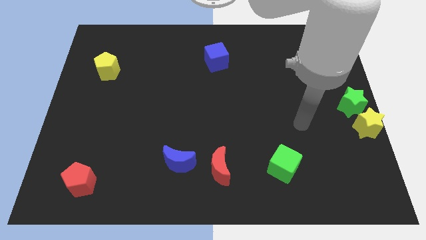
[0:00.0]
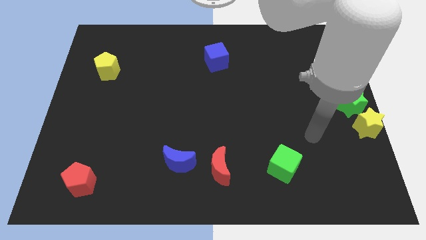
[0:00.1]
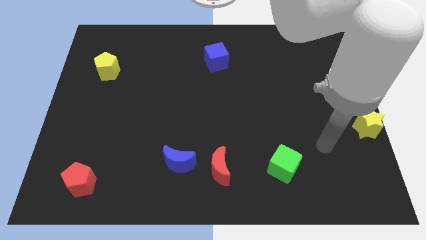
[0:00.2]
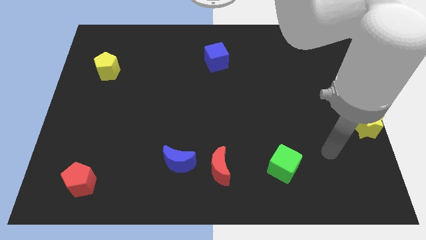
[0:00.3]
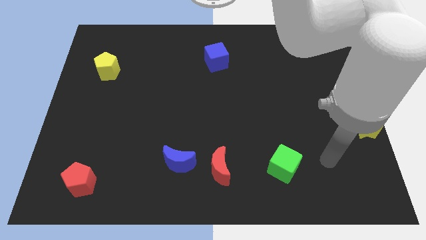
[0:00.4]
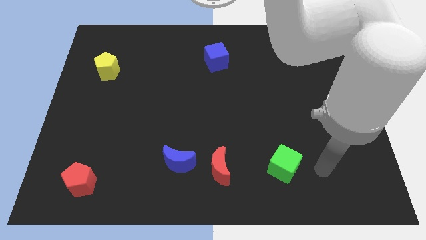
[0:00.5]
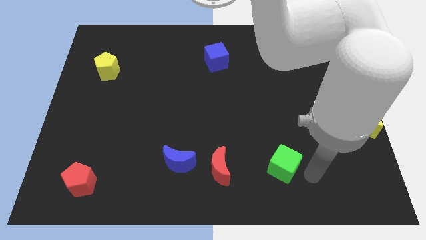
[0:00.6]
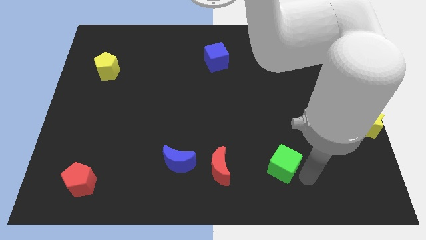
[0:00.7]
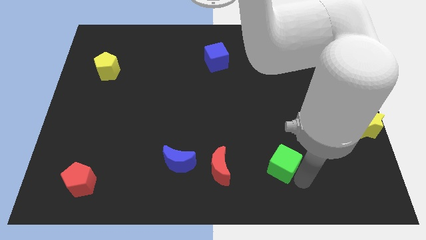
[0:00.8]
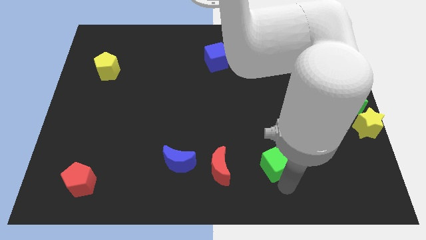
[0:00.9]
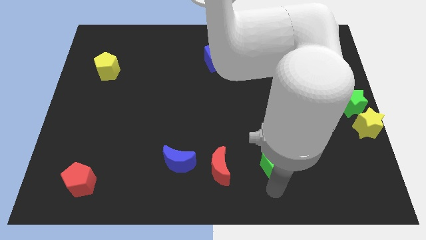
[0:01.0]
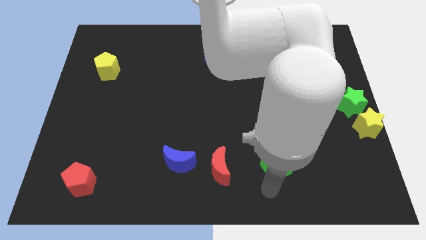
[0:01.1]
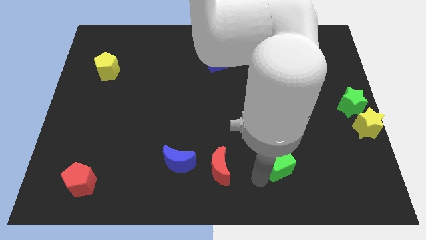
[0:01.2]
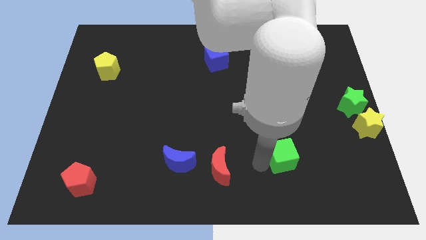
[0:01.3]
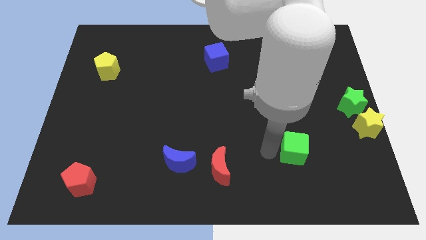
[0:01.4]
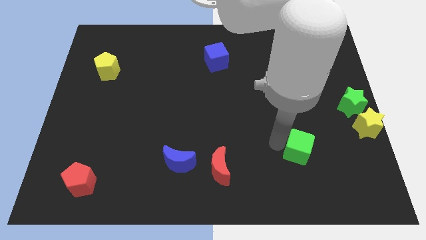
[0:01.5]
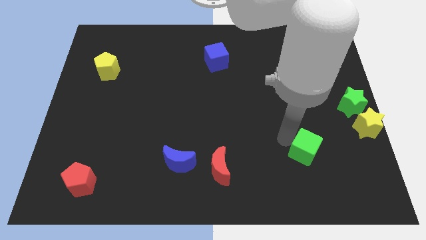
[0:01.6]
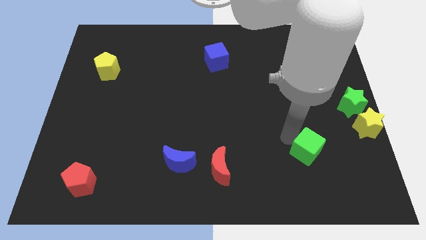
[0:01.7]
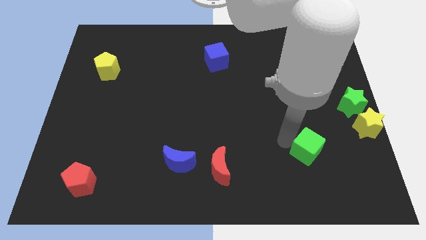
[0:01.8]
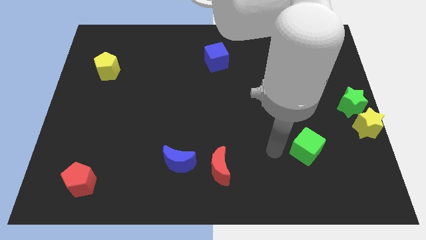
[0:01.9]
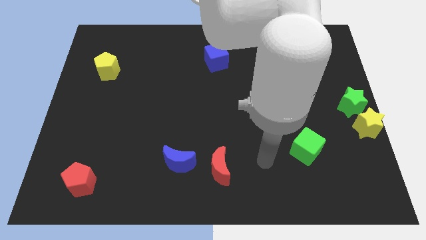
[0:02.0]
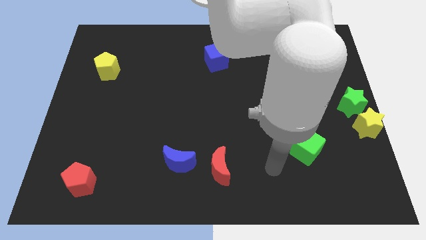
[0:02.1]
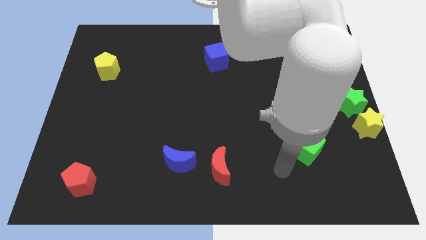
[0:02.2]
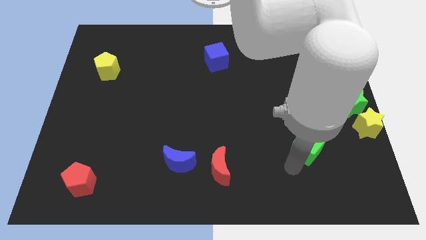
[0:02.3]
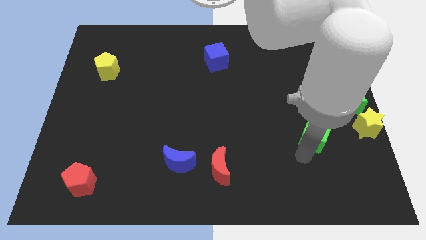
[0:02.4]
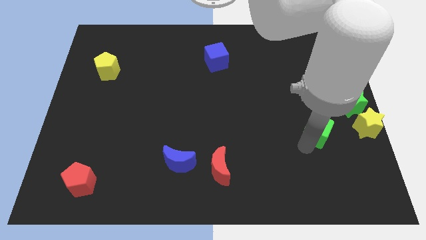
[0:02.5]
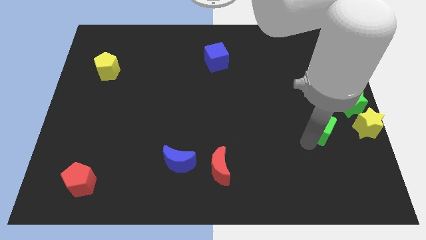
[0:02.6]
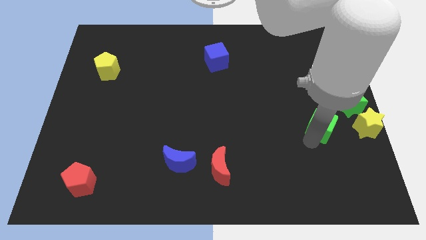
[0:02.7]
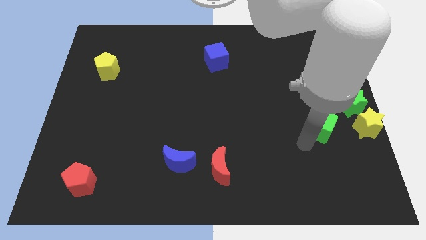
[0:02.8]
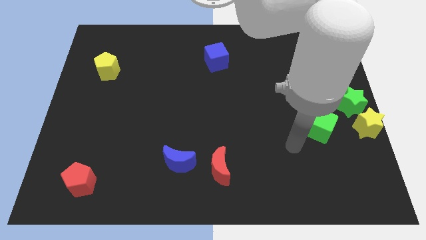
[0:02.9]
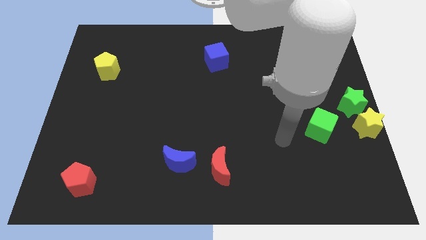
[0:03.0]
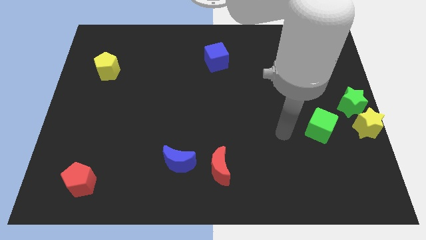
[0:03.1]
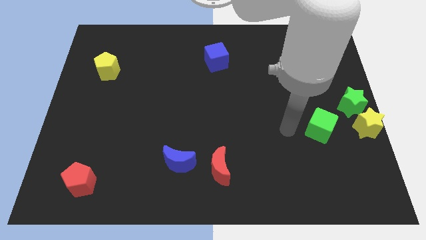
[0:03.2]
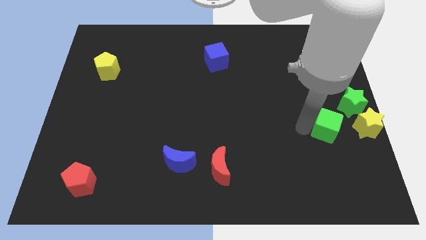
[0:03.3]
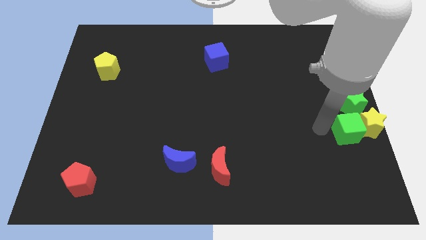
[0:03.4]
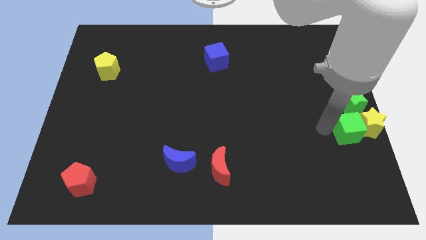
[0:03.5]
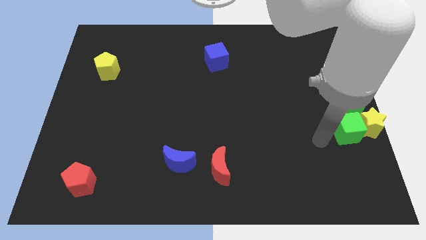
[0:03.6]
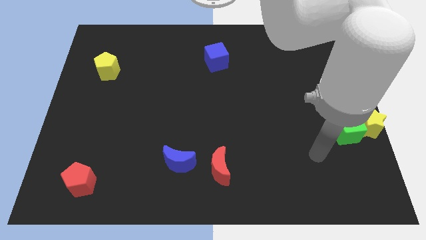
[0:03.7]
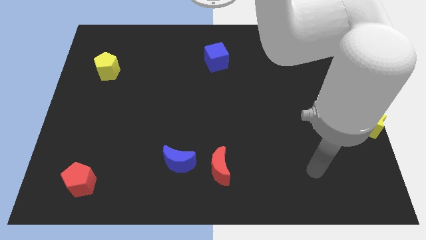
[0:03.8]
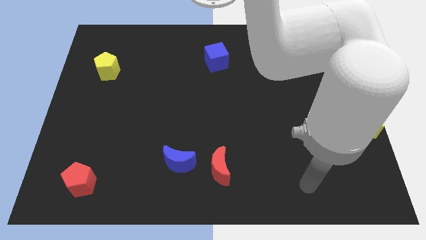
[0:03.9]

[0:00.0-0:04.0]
push the green cube into the yellow star

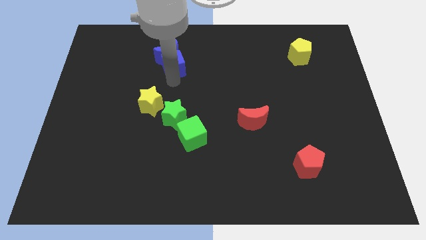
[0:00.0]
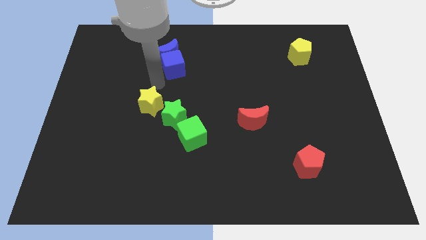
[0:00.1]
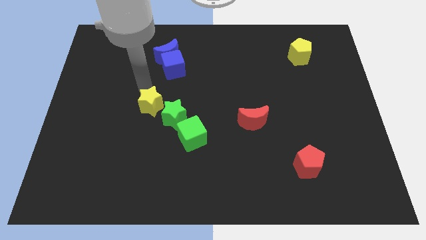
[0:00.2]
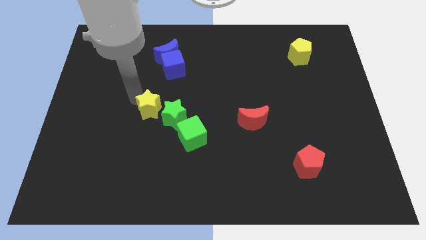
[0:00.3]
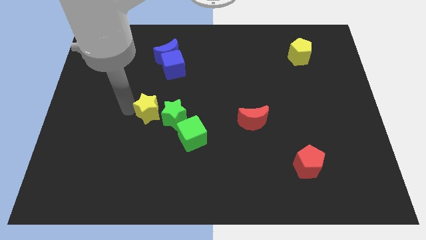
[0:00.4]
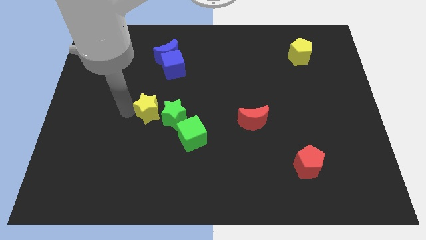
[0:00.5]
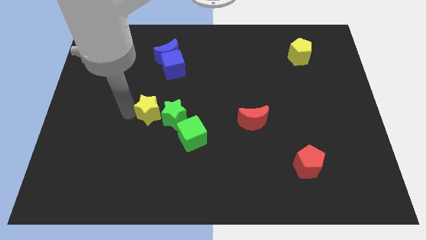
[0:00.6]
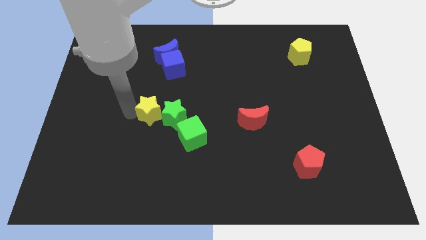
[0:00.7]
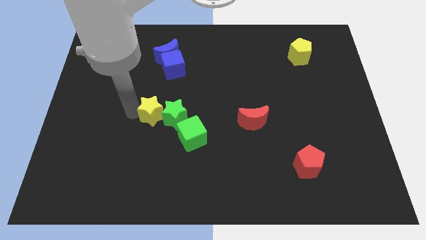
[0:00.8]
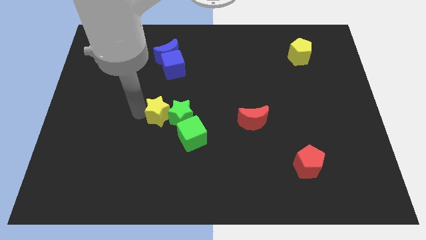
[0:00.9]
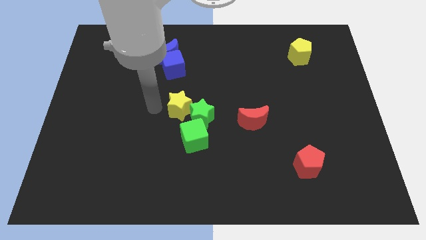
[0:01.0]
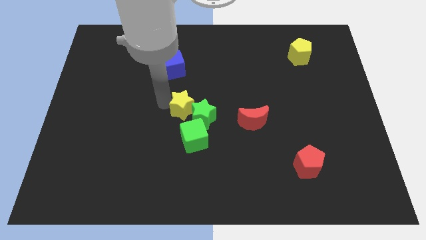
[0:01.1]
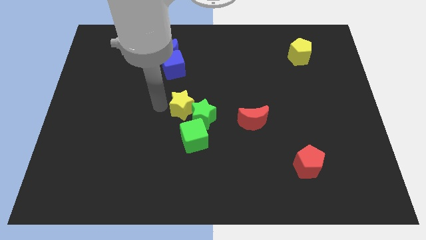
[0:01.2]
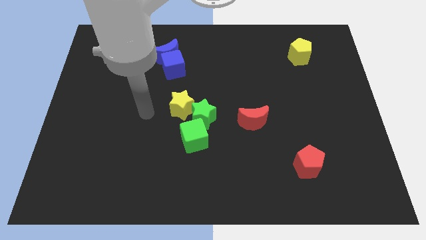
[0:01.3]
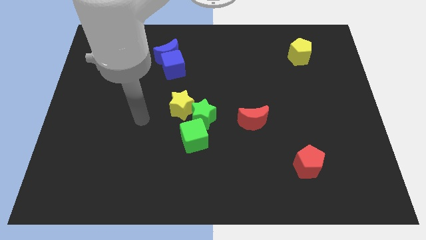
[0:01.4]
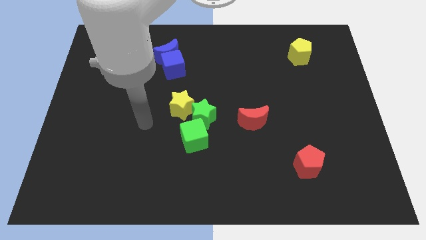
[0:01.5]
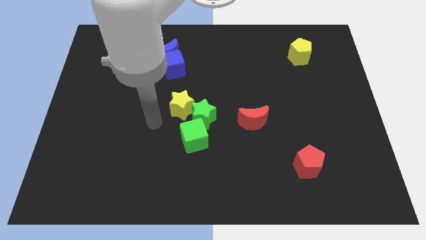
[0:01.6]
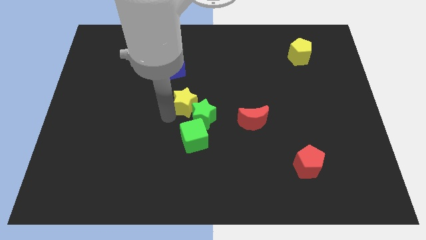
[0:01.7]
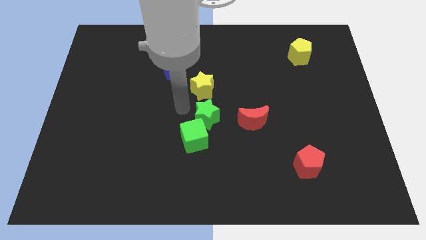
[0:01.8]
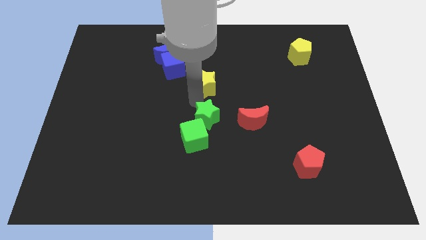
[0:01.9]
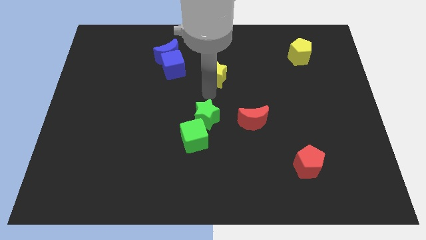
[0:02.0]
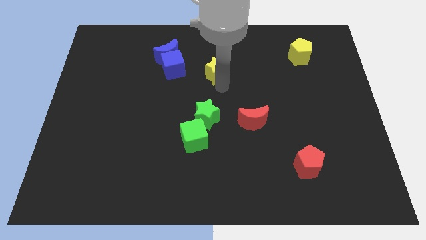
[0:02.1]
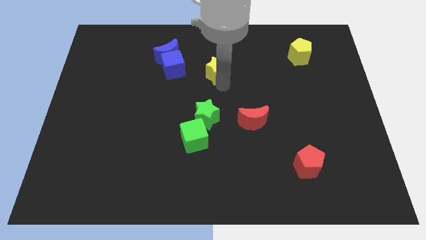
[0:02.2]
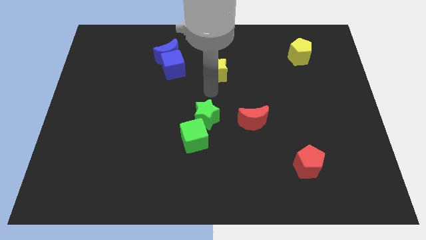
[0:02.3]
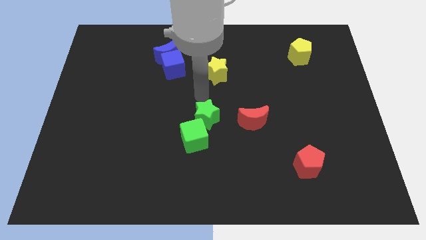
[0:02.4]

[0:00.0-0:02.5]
move yellow star away from the green star

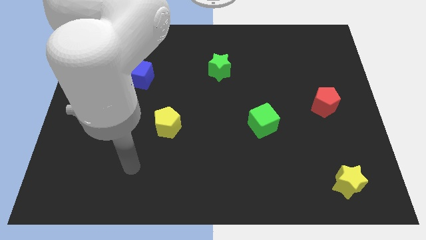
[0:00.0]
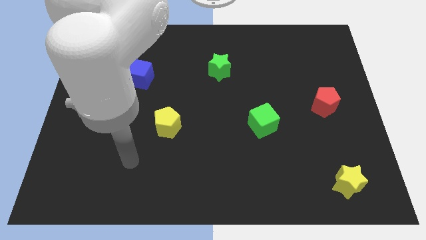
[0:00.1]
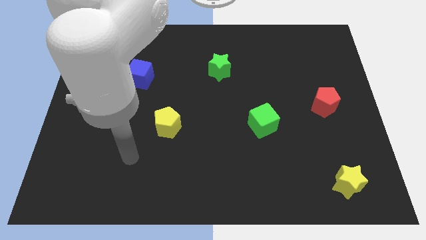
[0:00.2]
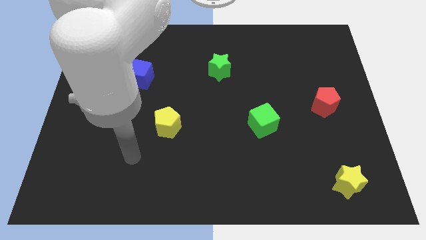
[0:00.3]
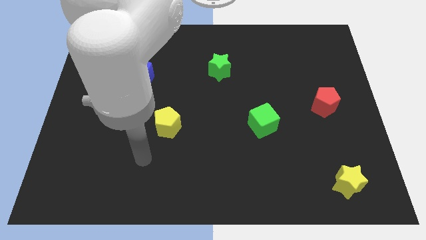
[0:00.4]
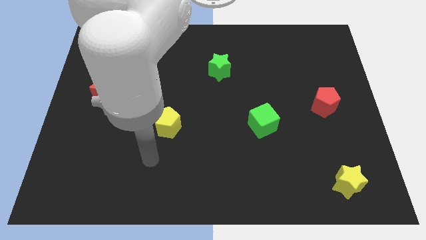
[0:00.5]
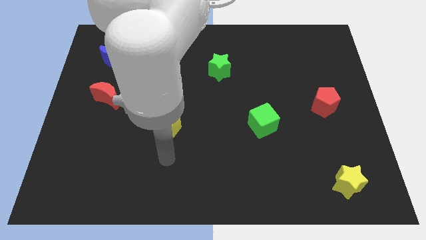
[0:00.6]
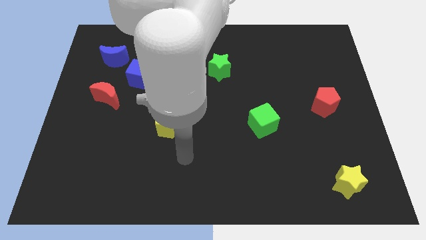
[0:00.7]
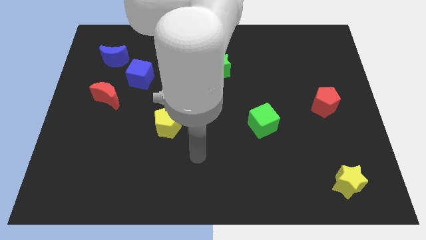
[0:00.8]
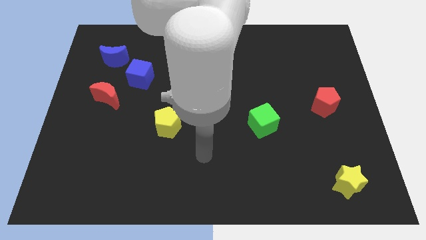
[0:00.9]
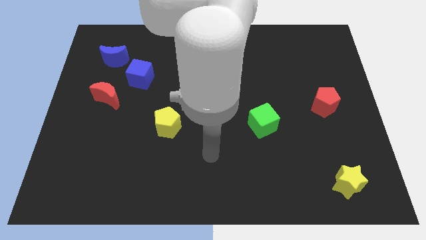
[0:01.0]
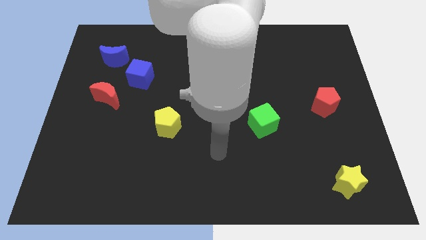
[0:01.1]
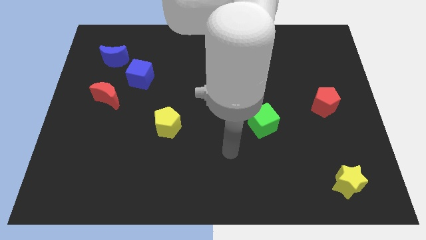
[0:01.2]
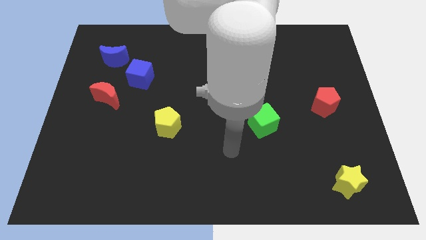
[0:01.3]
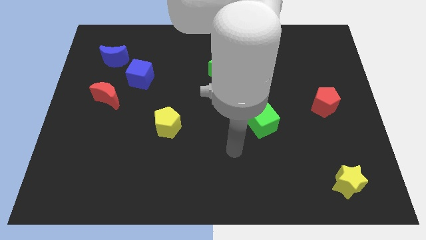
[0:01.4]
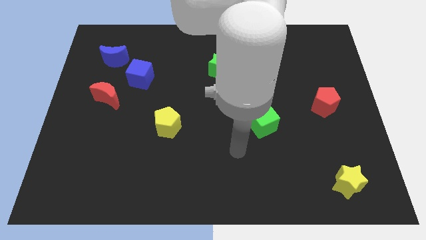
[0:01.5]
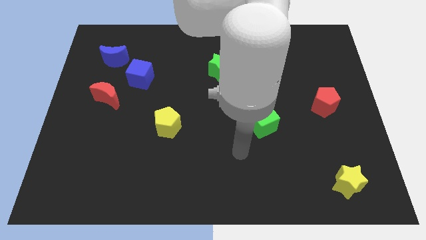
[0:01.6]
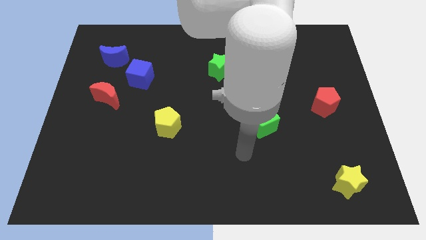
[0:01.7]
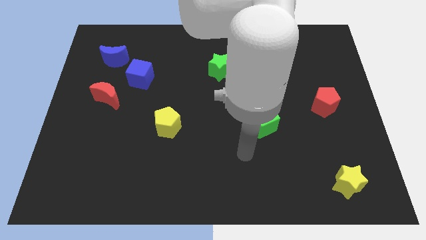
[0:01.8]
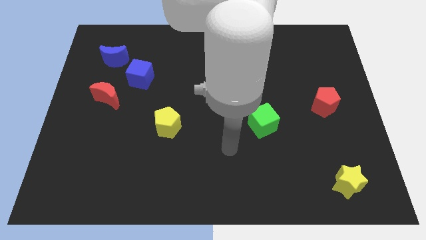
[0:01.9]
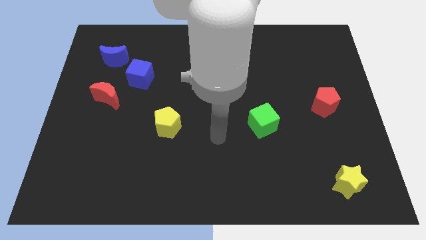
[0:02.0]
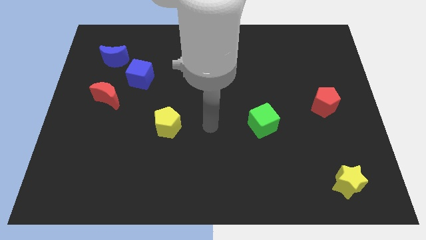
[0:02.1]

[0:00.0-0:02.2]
place your arm in between the green cube and yellow pentagon

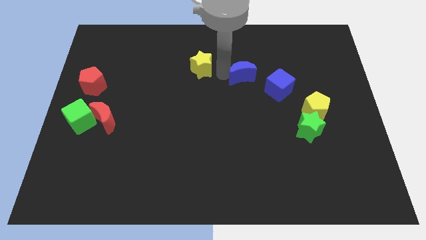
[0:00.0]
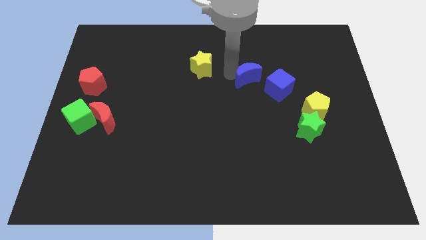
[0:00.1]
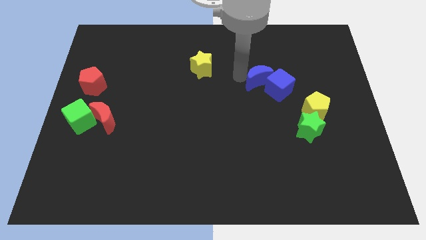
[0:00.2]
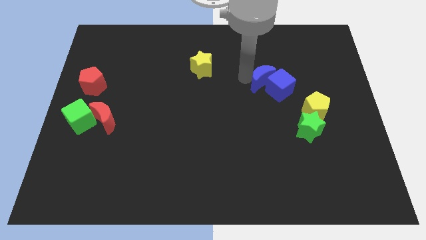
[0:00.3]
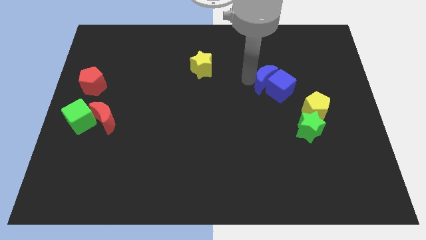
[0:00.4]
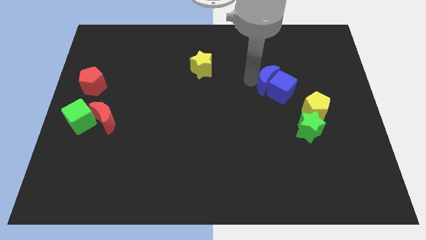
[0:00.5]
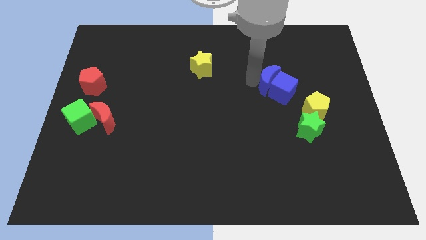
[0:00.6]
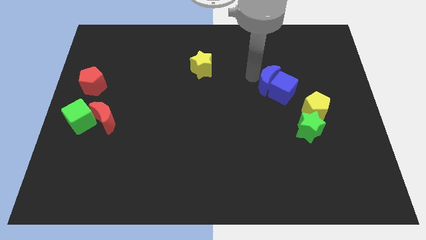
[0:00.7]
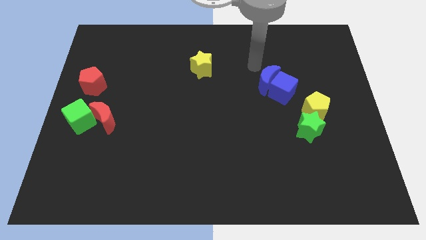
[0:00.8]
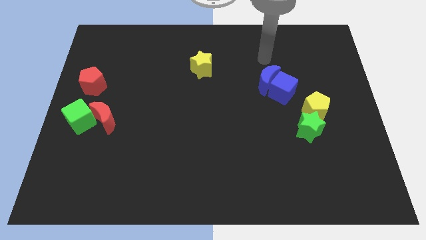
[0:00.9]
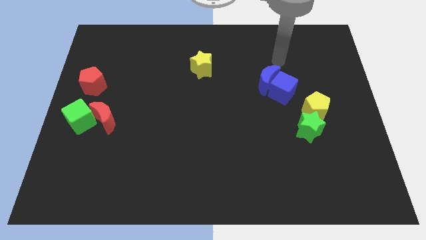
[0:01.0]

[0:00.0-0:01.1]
push the blue crescent into the blue cube
